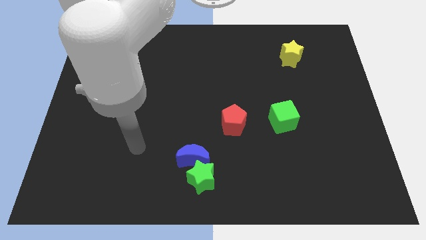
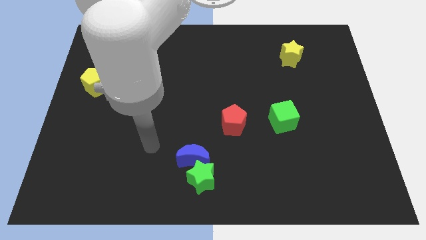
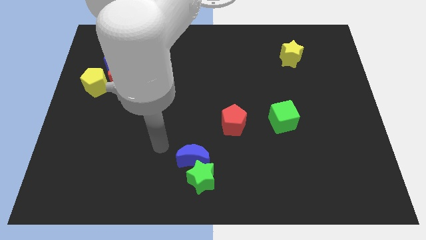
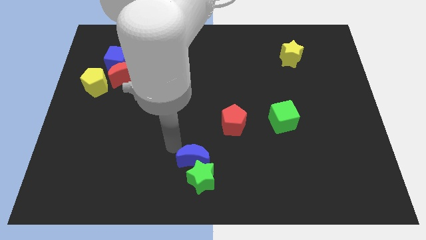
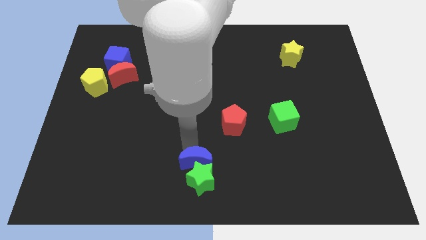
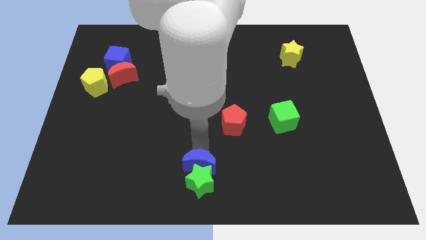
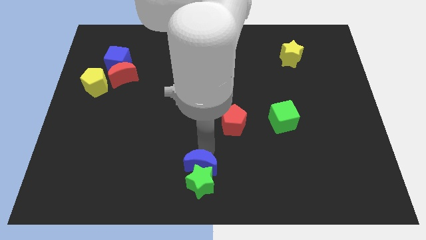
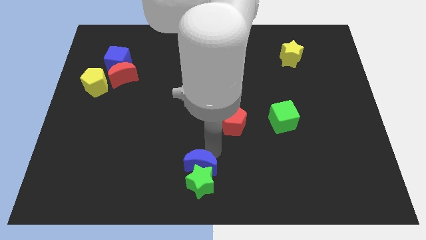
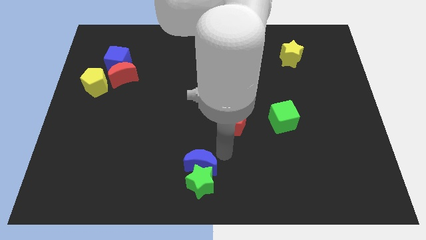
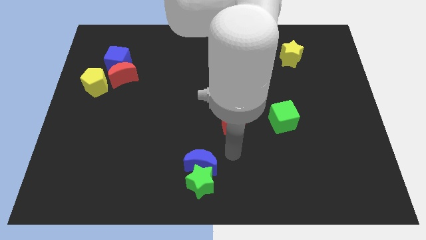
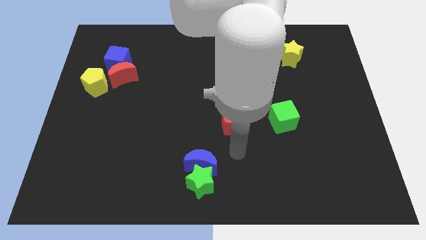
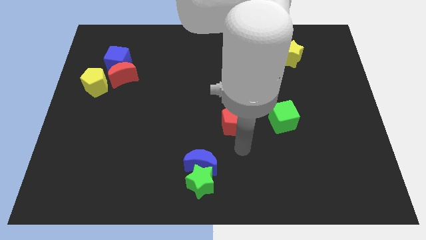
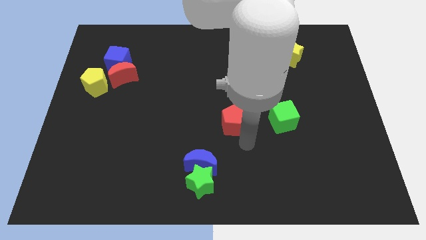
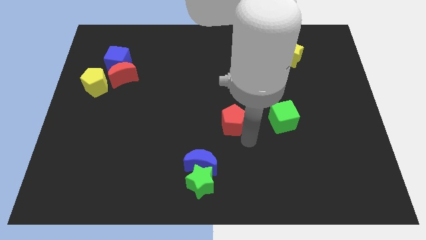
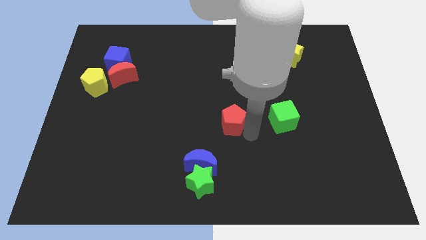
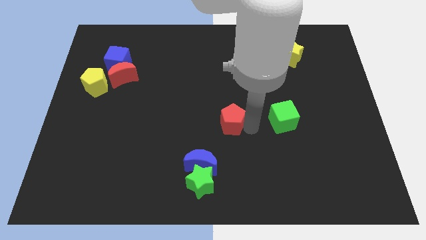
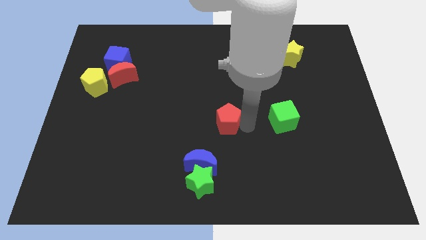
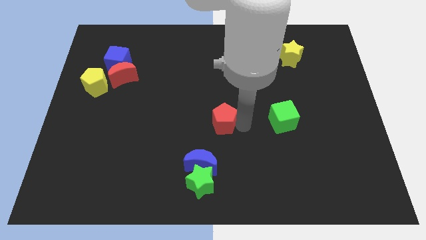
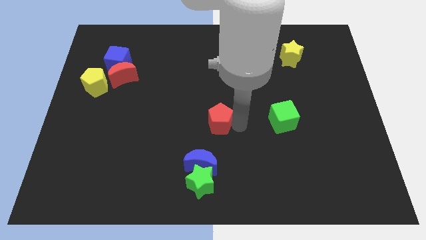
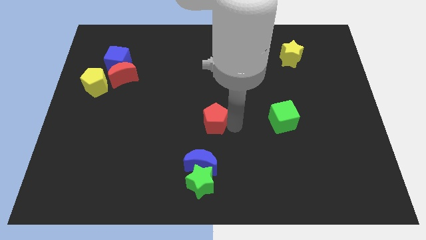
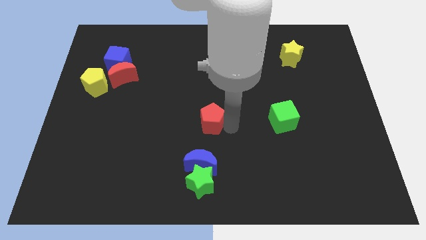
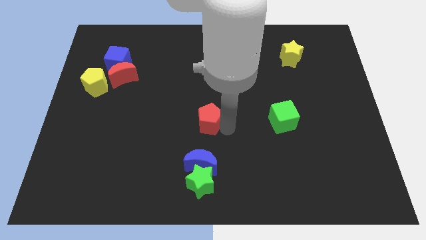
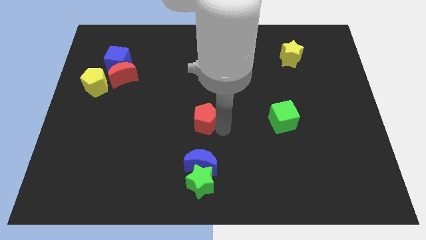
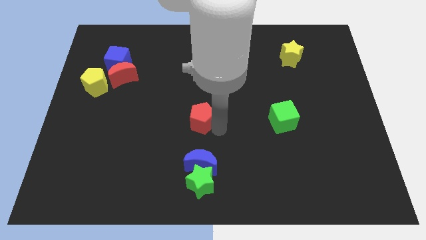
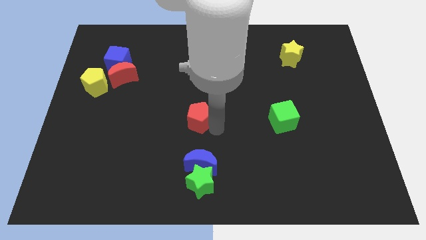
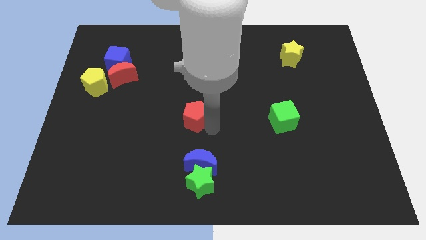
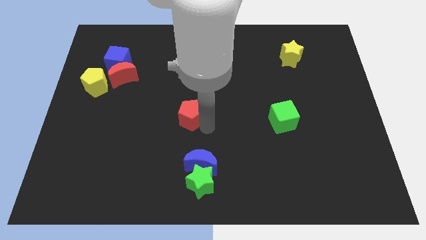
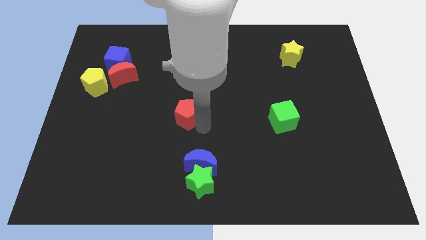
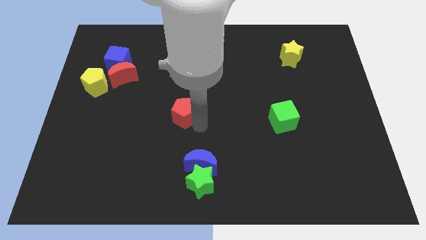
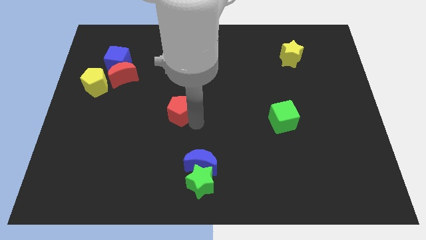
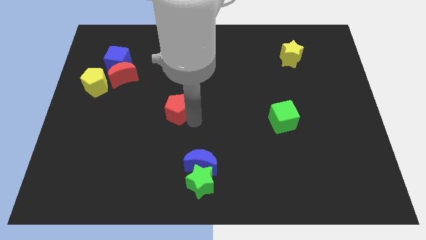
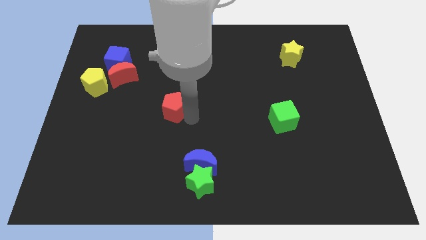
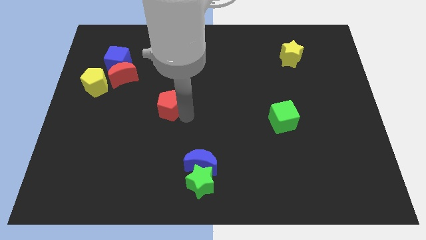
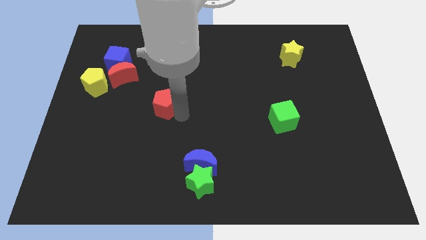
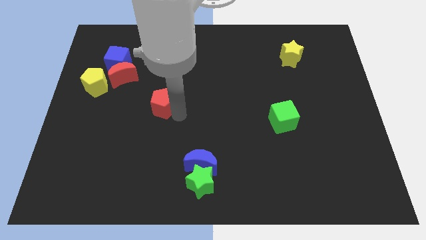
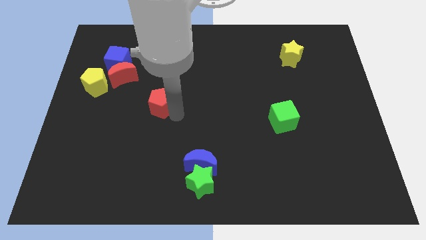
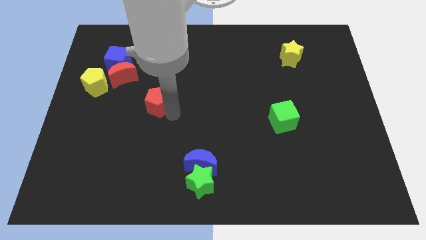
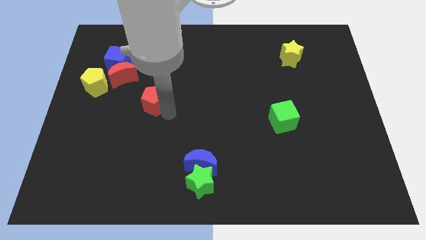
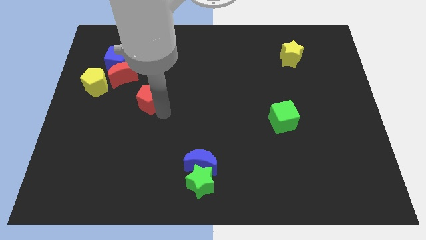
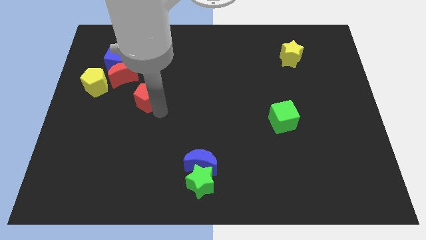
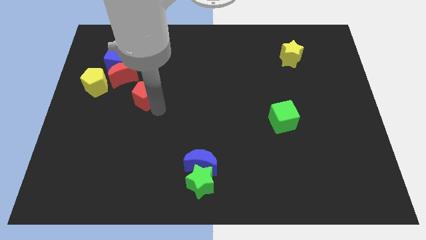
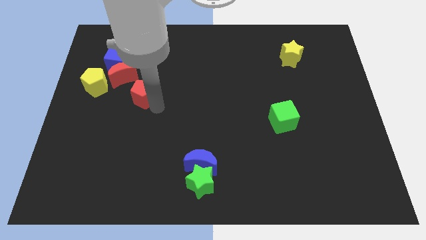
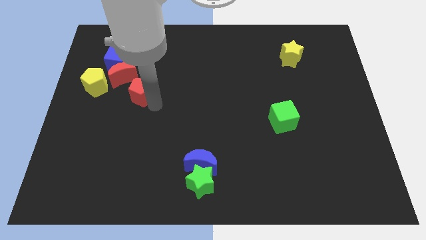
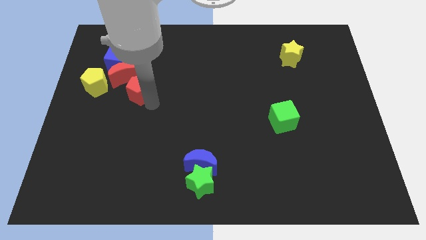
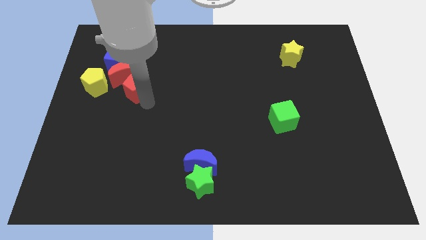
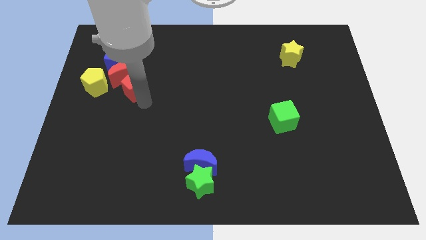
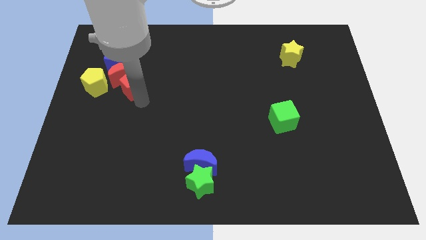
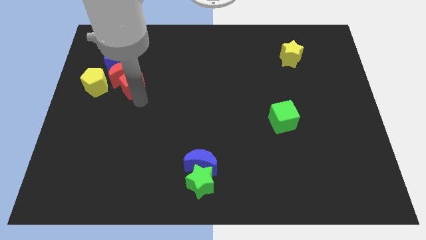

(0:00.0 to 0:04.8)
put the red pentagon close to the red moon

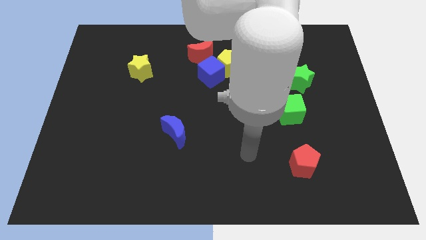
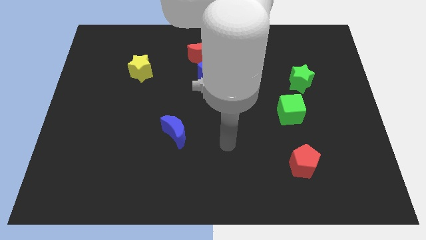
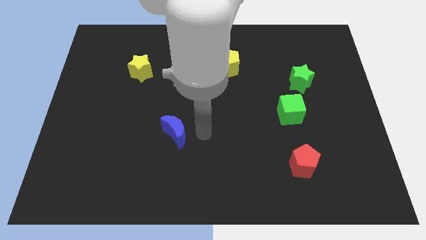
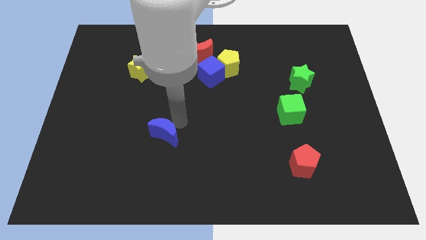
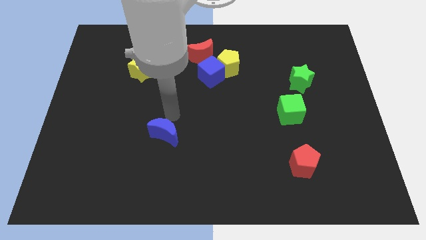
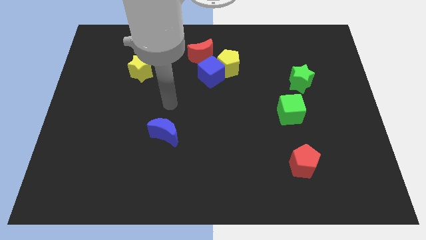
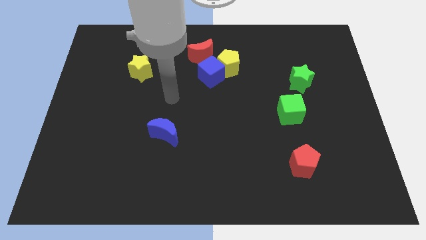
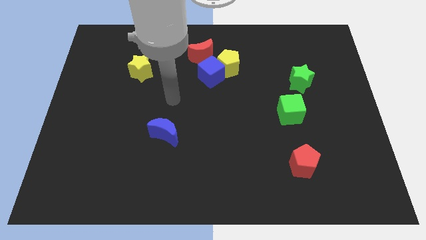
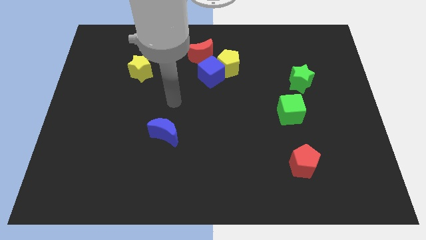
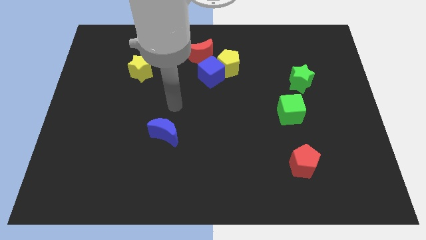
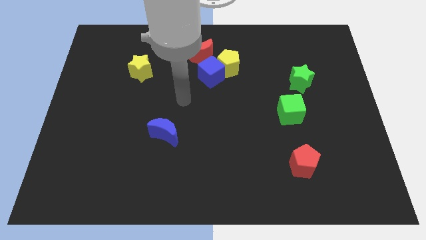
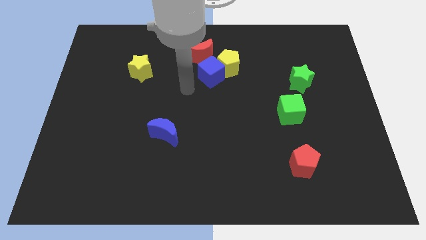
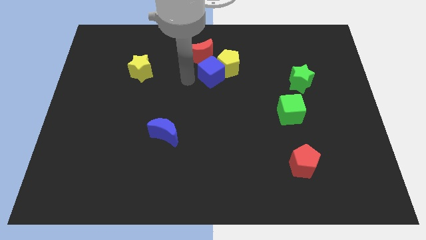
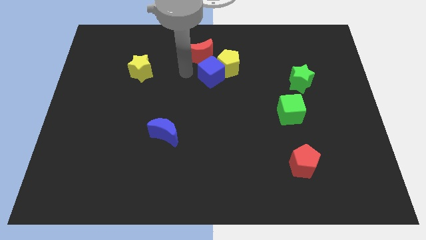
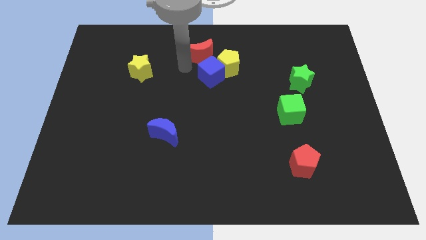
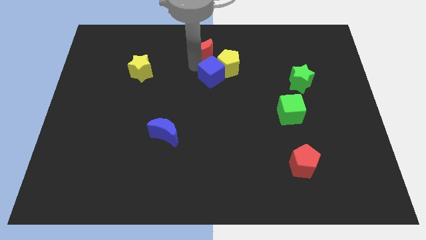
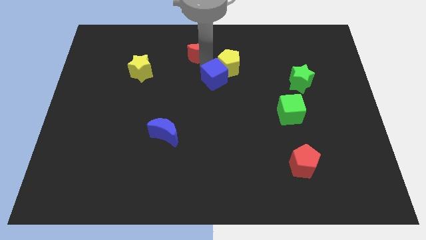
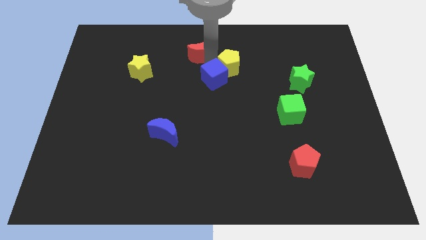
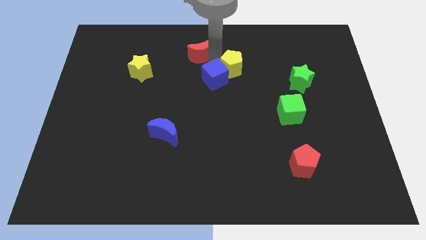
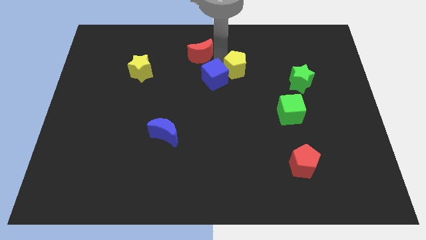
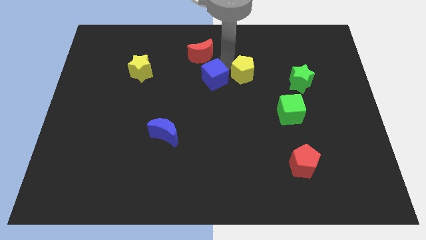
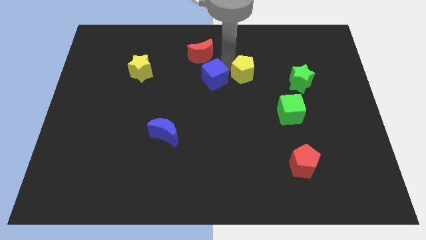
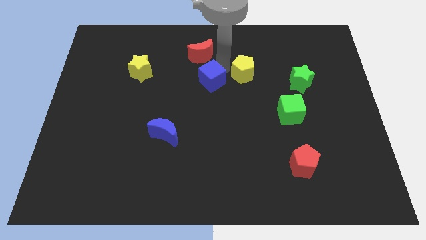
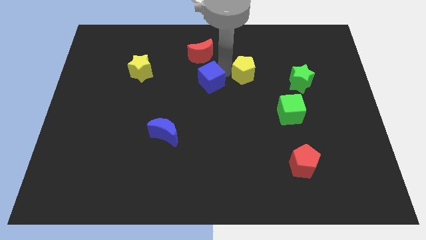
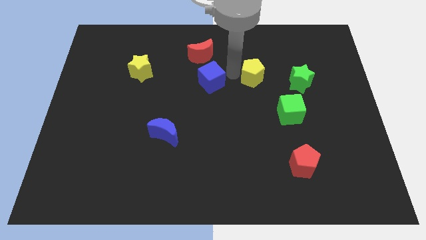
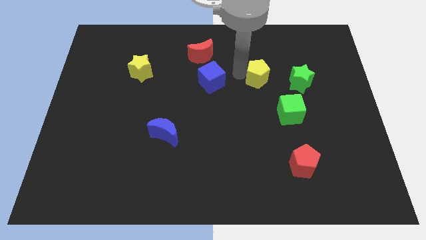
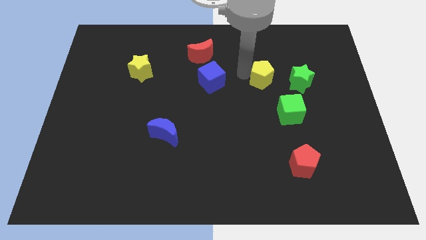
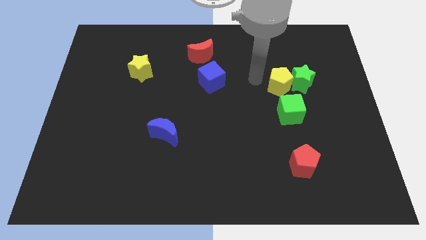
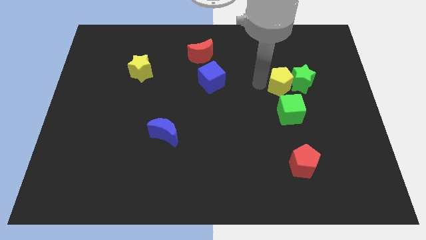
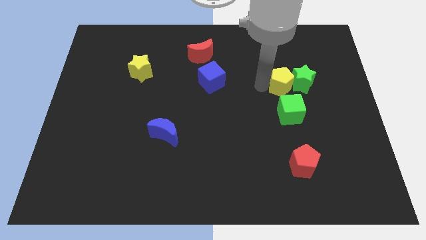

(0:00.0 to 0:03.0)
push the yellow pentagon towards the green star

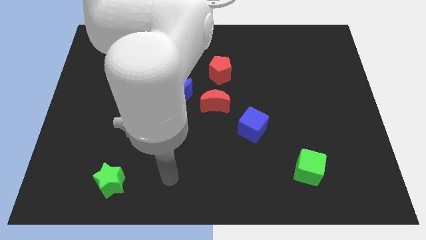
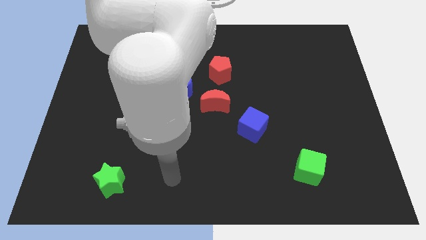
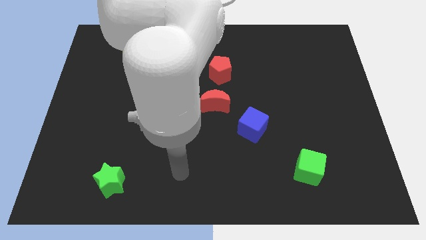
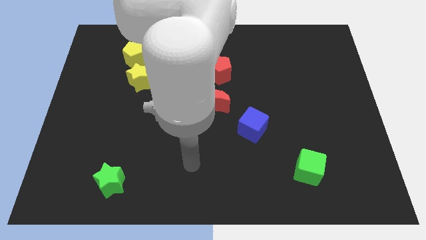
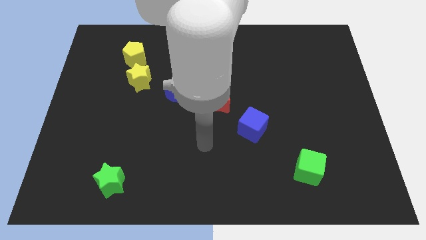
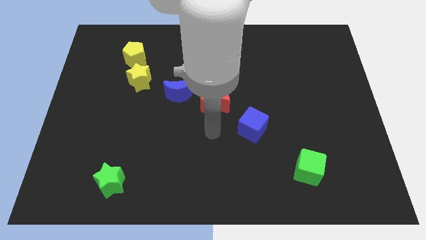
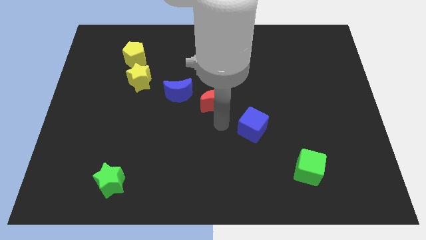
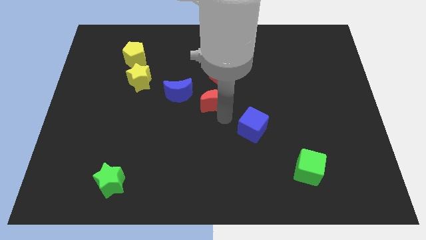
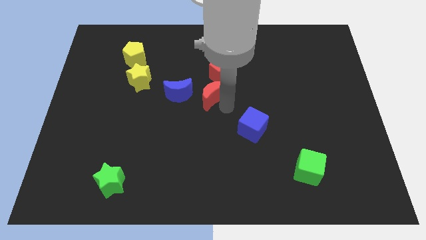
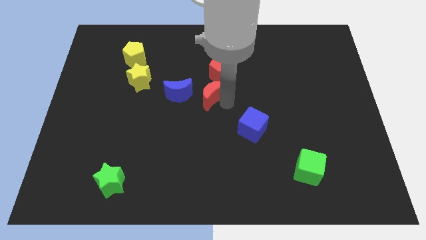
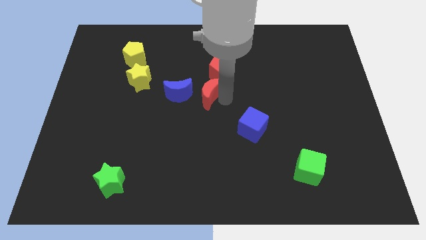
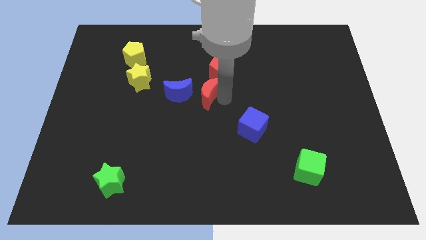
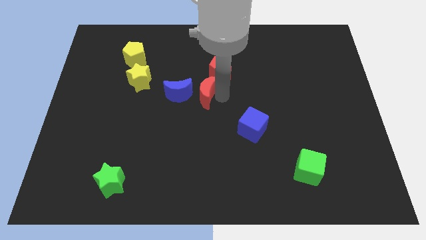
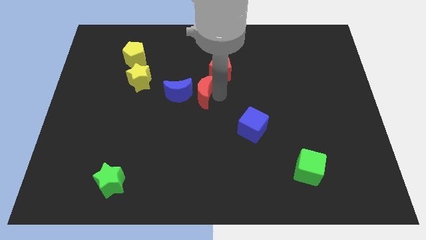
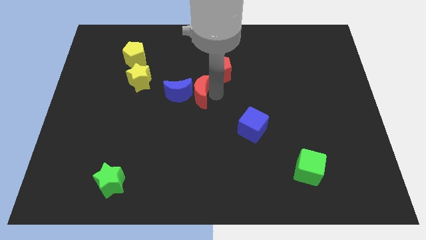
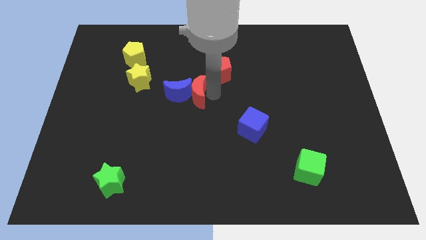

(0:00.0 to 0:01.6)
move the red moon towards the blue moon
